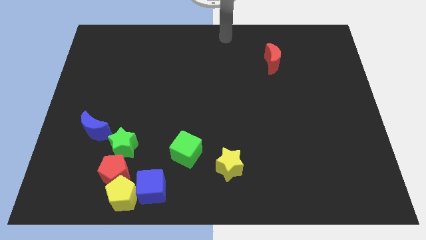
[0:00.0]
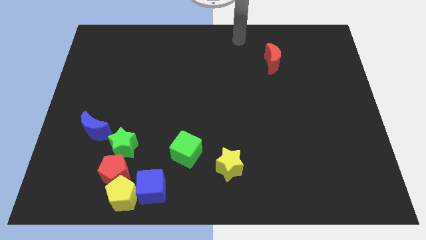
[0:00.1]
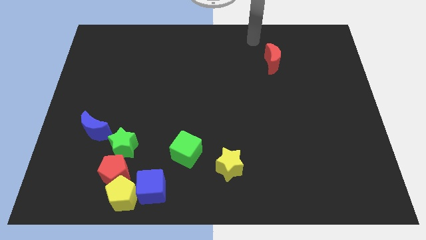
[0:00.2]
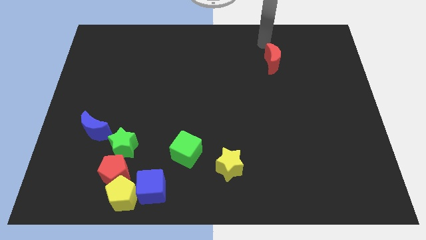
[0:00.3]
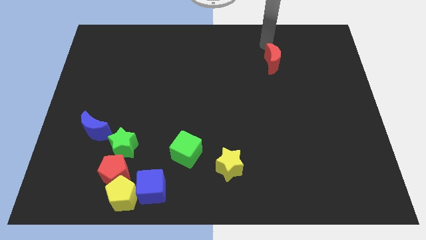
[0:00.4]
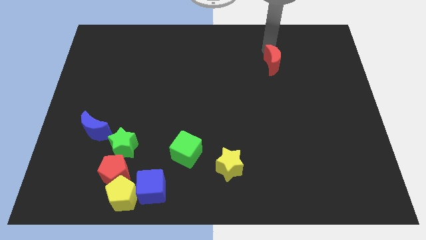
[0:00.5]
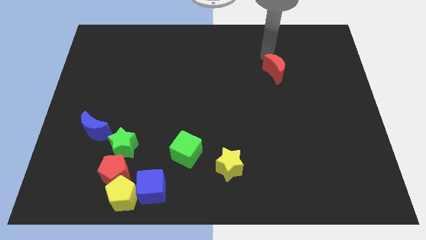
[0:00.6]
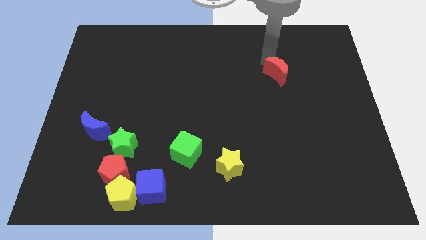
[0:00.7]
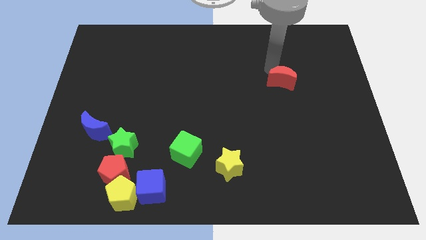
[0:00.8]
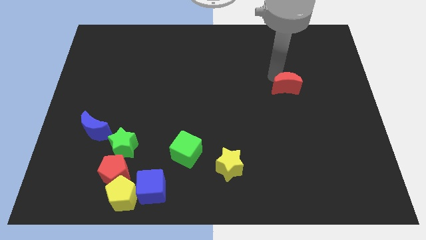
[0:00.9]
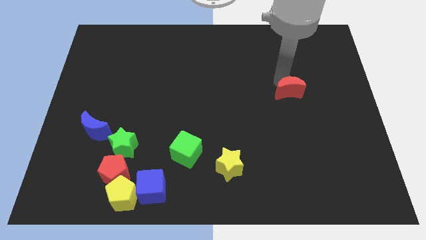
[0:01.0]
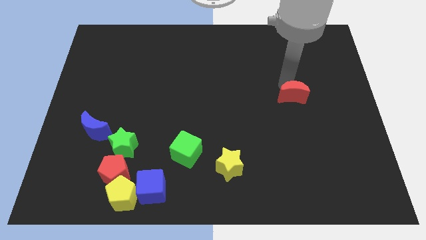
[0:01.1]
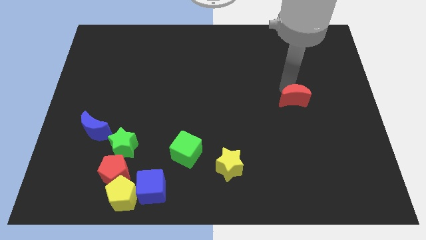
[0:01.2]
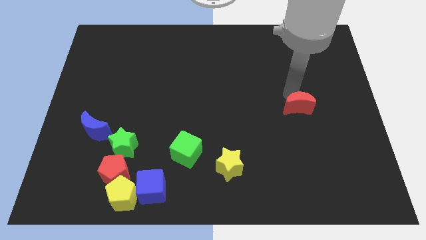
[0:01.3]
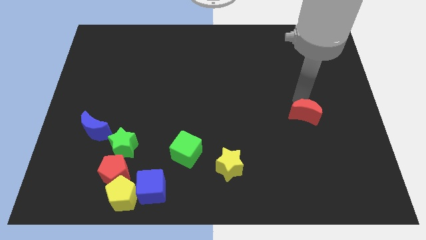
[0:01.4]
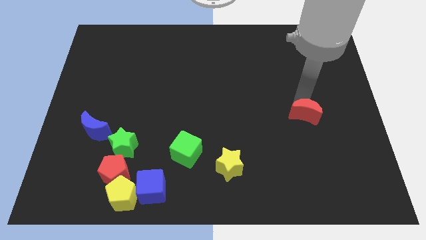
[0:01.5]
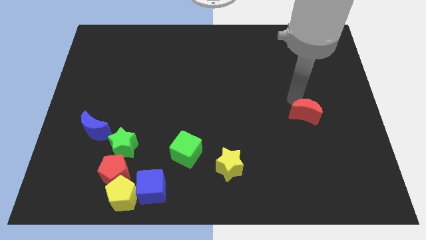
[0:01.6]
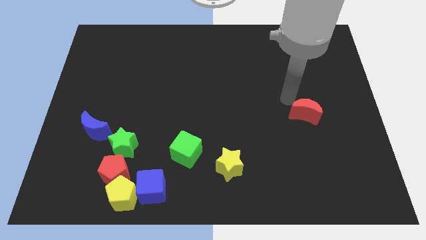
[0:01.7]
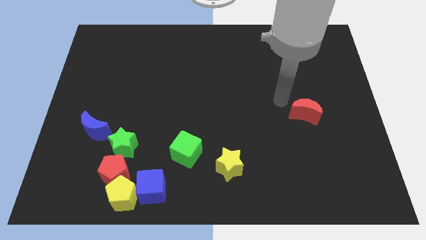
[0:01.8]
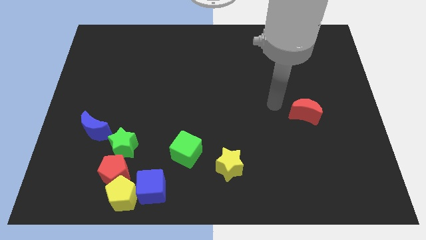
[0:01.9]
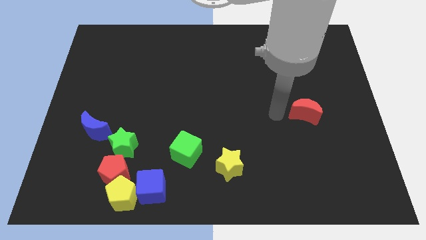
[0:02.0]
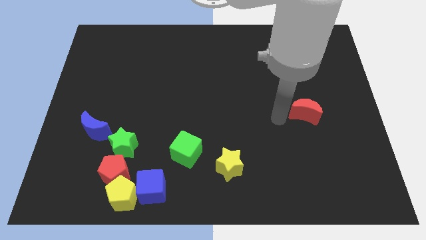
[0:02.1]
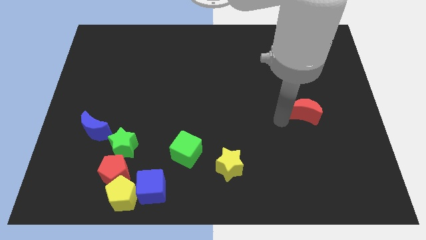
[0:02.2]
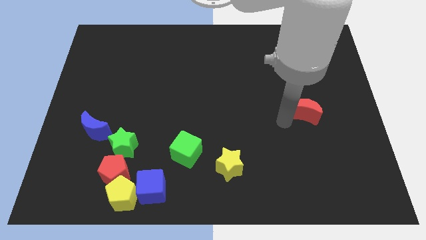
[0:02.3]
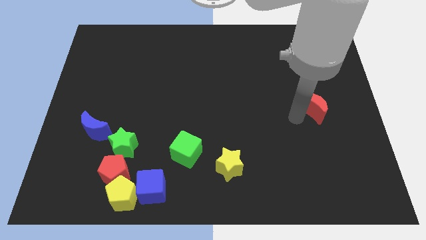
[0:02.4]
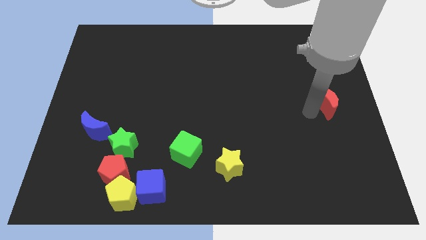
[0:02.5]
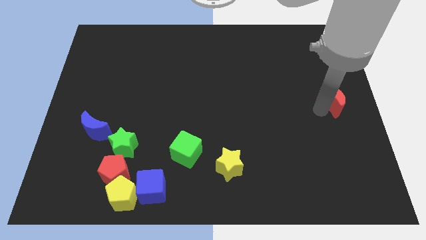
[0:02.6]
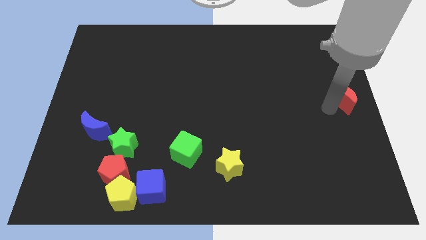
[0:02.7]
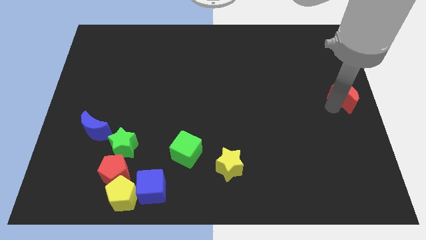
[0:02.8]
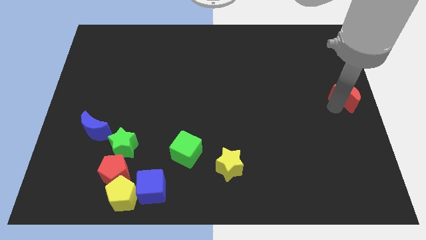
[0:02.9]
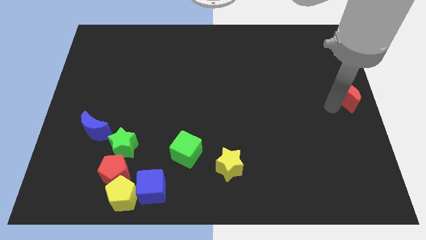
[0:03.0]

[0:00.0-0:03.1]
move red moon to the center right

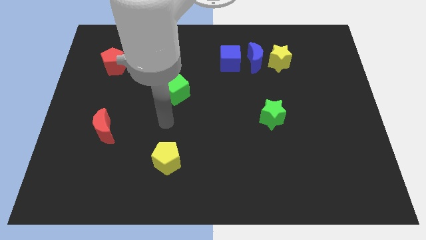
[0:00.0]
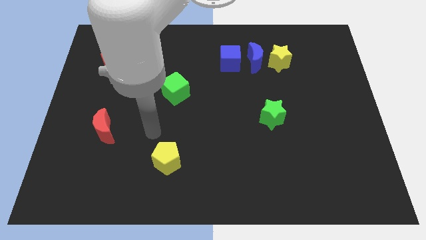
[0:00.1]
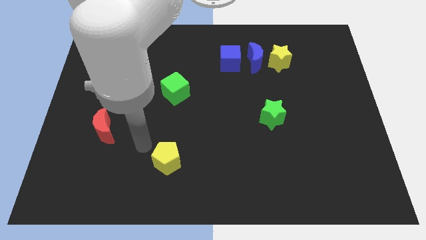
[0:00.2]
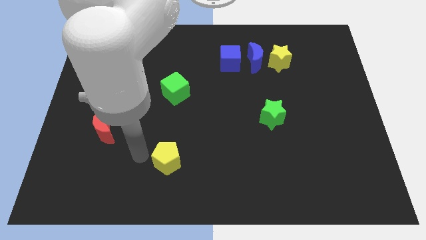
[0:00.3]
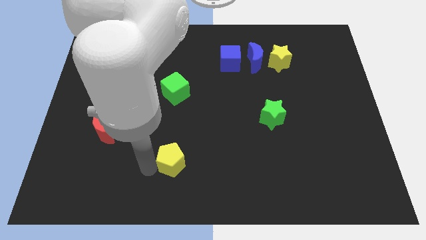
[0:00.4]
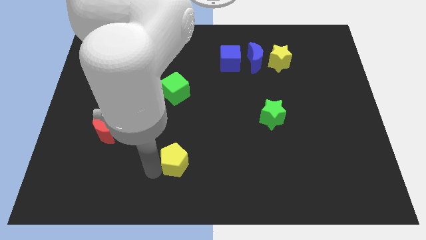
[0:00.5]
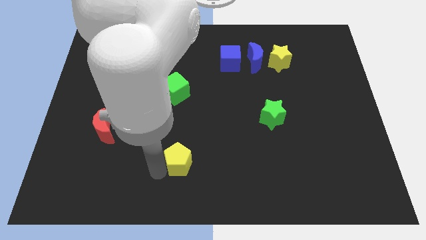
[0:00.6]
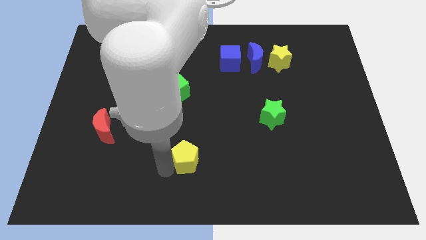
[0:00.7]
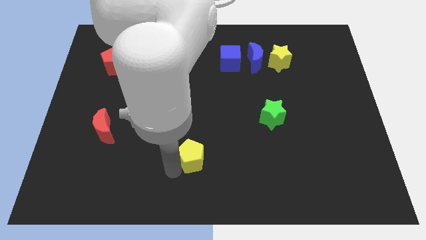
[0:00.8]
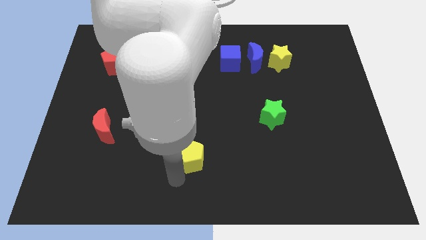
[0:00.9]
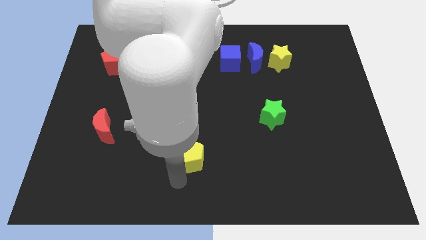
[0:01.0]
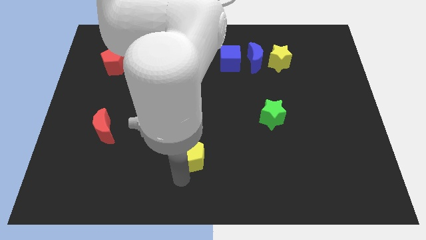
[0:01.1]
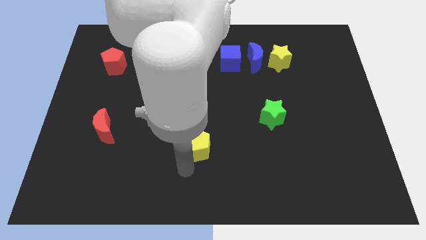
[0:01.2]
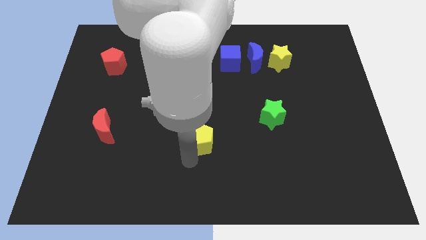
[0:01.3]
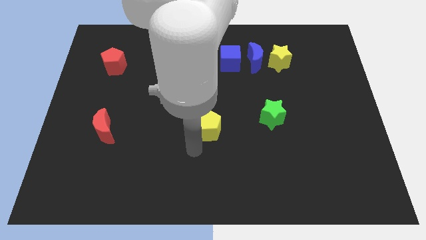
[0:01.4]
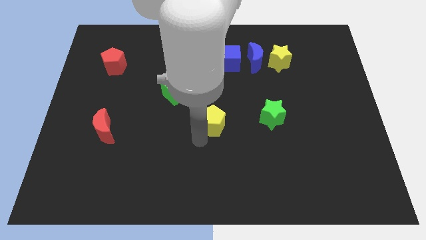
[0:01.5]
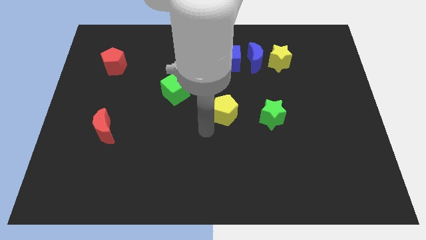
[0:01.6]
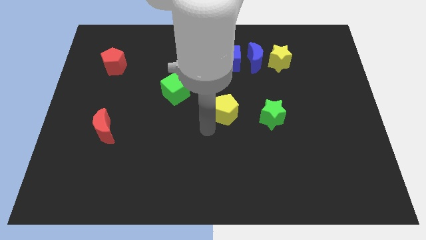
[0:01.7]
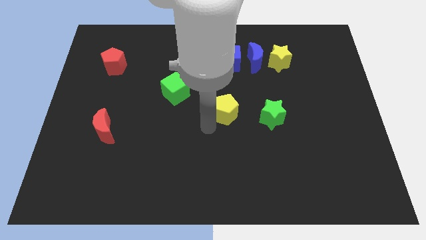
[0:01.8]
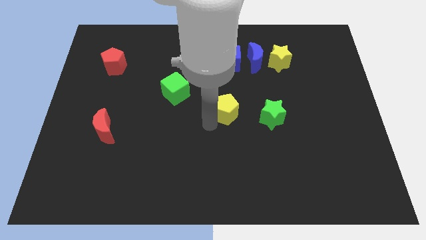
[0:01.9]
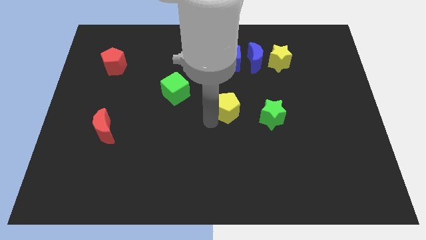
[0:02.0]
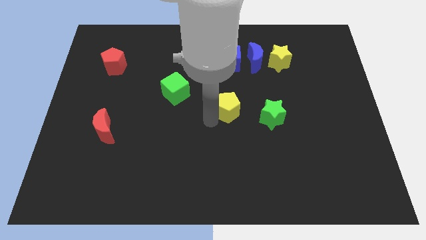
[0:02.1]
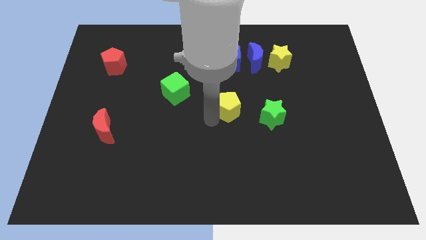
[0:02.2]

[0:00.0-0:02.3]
put the yellow pentagon to the left of the green star

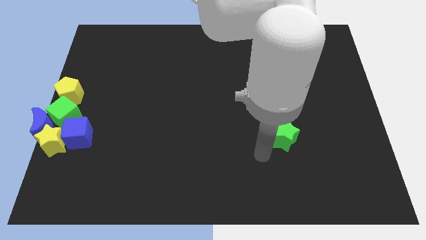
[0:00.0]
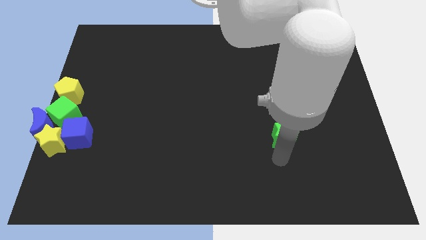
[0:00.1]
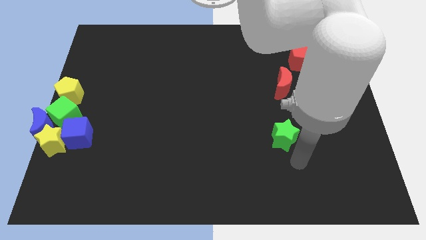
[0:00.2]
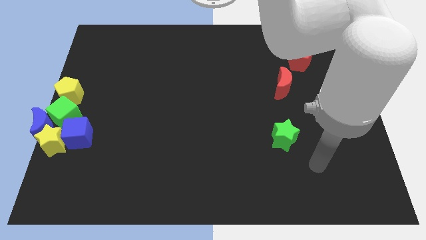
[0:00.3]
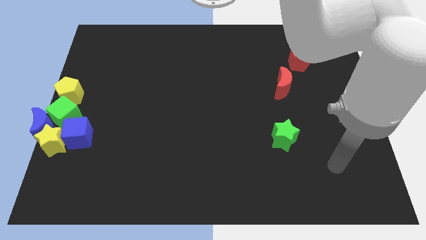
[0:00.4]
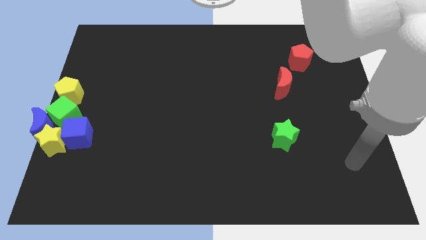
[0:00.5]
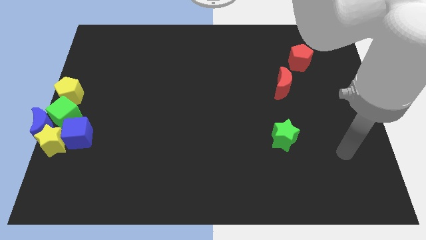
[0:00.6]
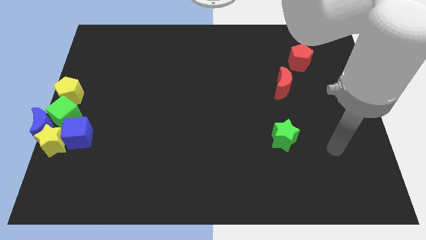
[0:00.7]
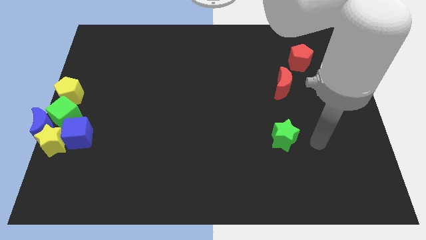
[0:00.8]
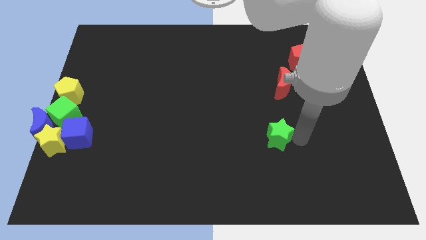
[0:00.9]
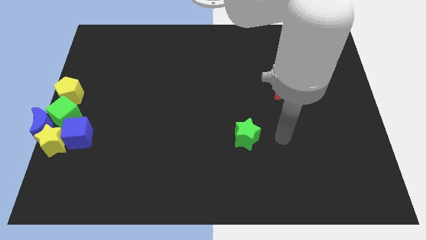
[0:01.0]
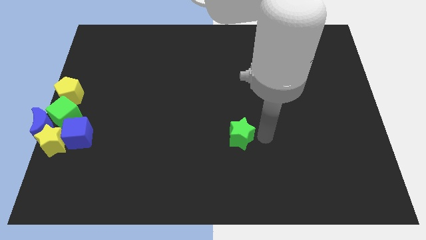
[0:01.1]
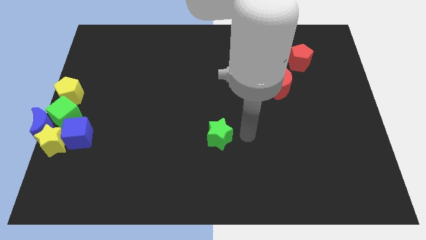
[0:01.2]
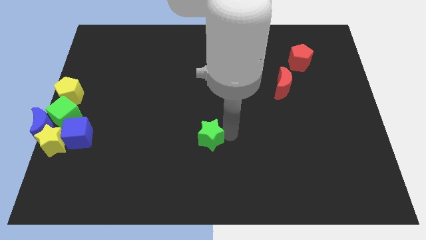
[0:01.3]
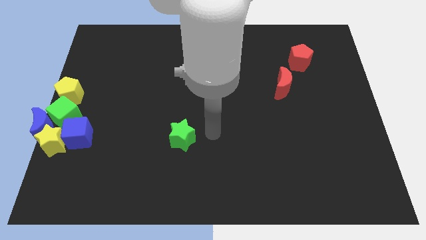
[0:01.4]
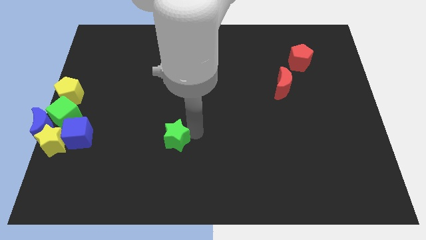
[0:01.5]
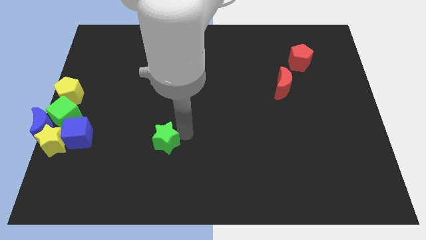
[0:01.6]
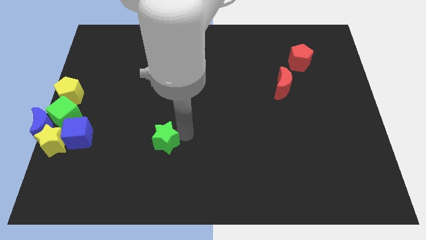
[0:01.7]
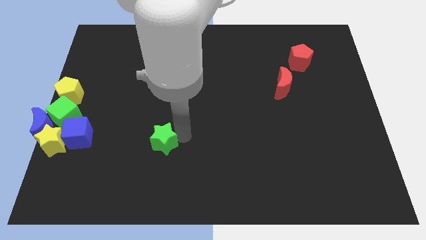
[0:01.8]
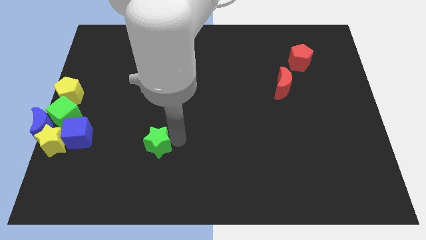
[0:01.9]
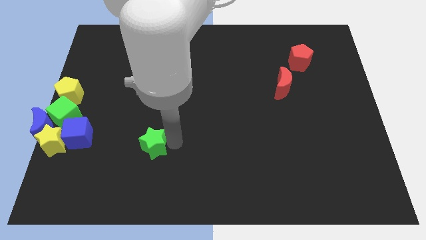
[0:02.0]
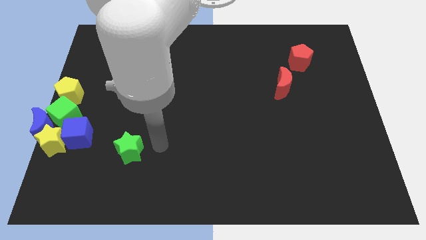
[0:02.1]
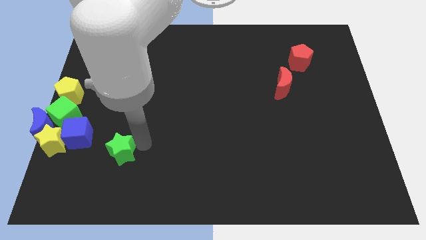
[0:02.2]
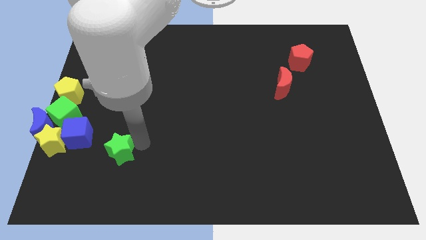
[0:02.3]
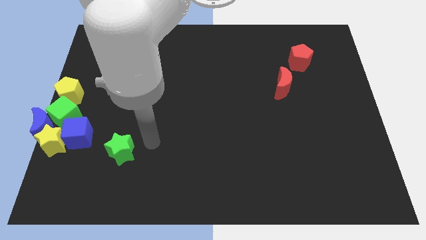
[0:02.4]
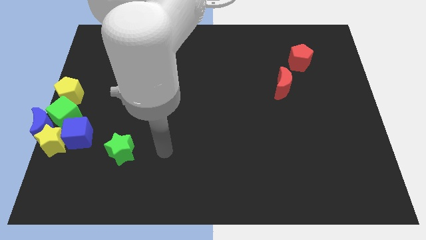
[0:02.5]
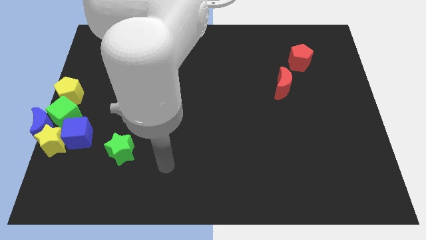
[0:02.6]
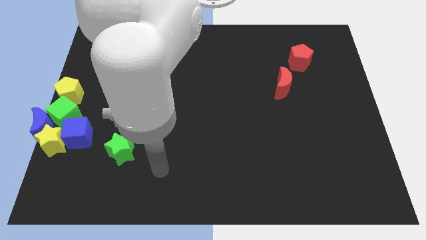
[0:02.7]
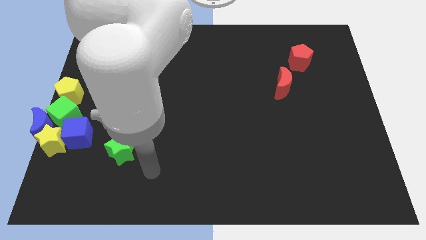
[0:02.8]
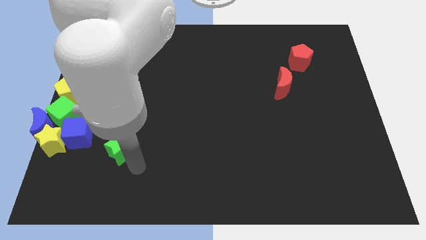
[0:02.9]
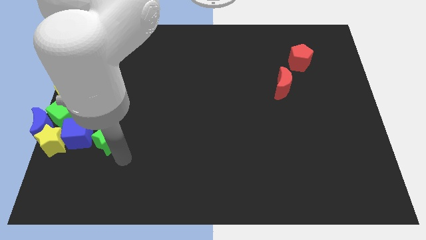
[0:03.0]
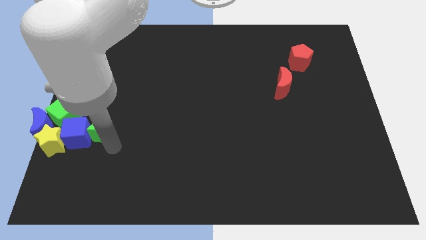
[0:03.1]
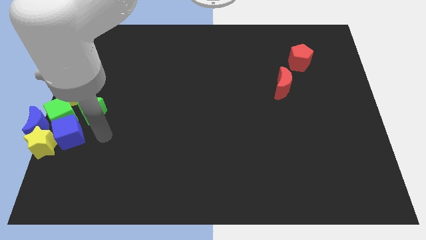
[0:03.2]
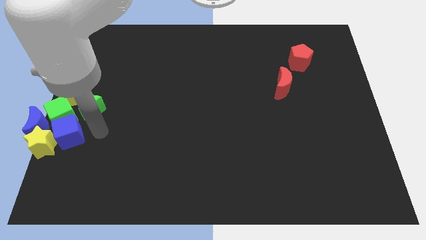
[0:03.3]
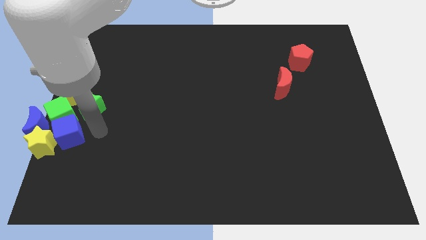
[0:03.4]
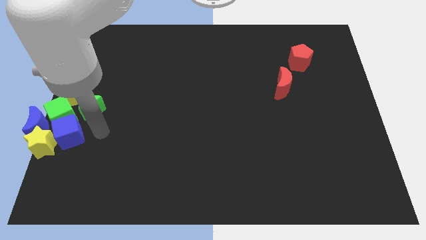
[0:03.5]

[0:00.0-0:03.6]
push the green star into the group of blocks
